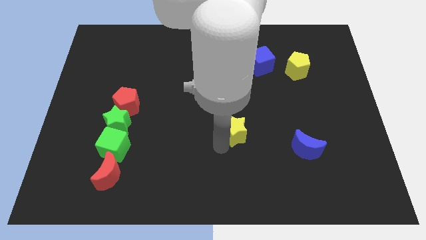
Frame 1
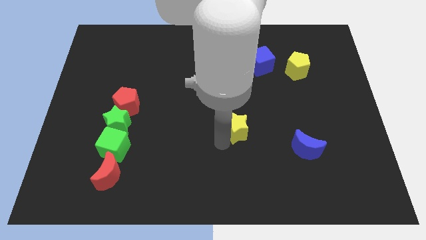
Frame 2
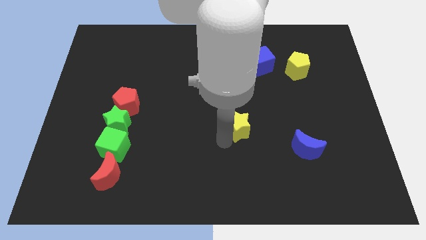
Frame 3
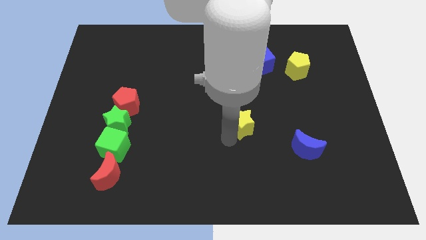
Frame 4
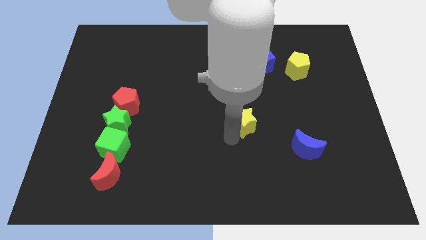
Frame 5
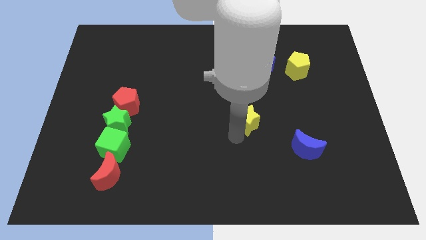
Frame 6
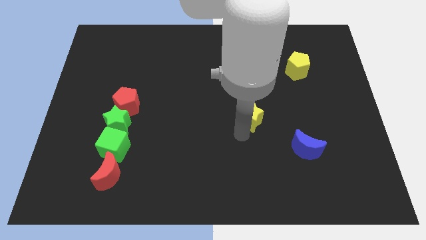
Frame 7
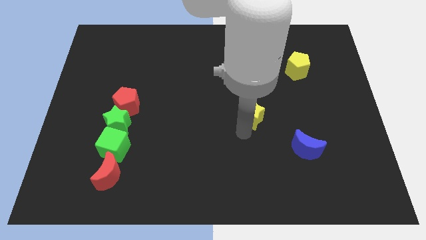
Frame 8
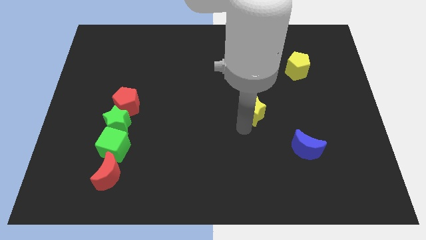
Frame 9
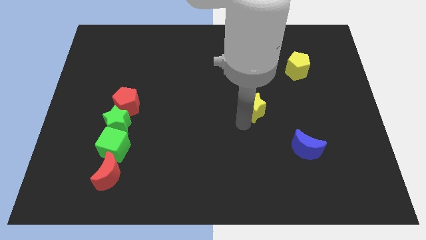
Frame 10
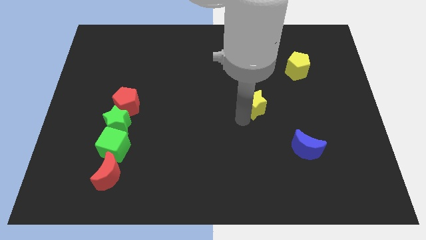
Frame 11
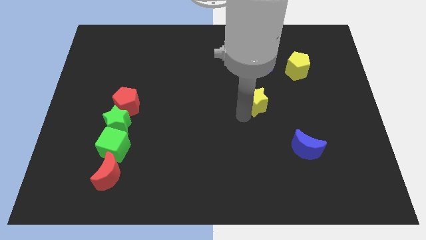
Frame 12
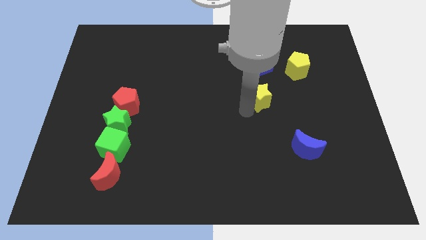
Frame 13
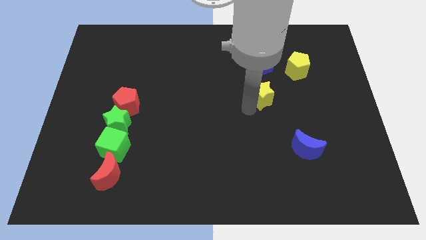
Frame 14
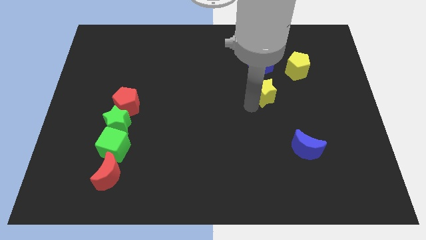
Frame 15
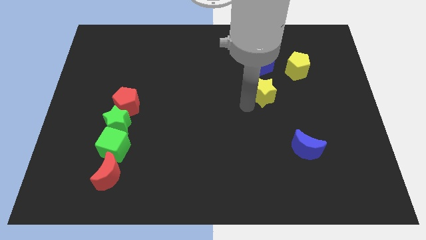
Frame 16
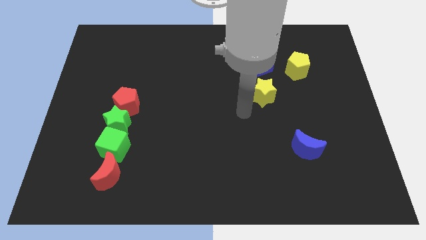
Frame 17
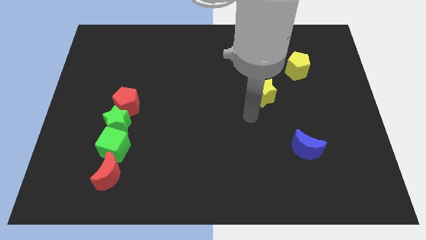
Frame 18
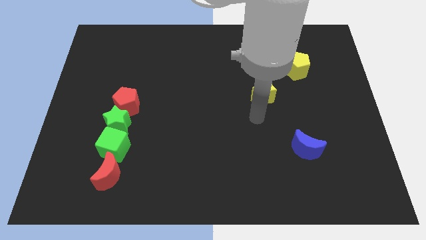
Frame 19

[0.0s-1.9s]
move the yellow star to the bottom side of the blue cube

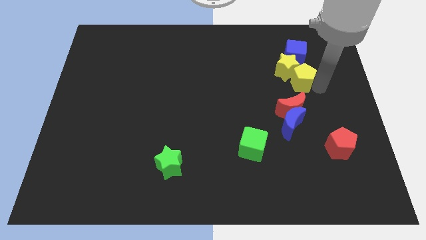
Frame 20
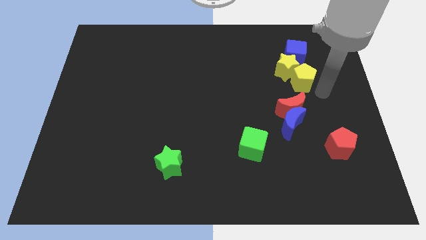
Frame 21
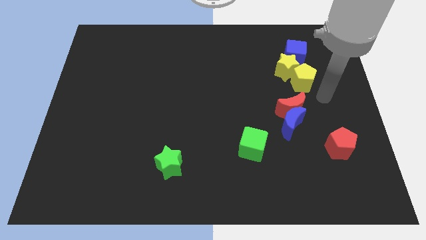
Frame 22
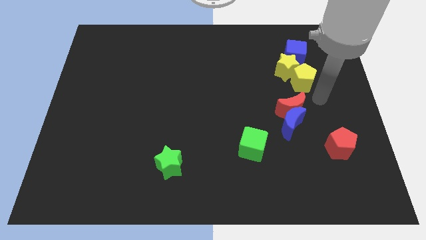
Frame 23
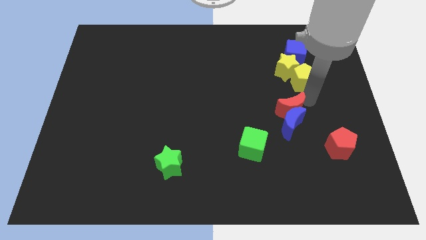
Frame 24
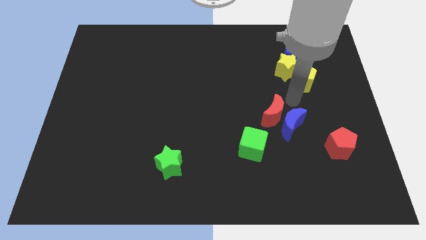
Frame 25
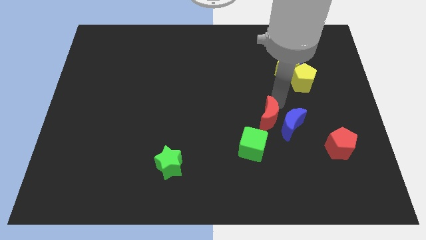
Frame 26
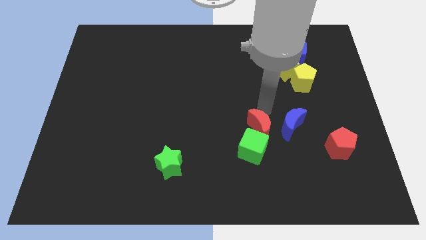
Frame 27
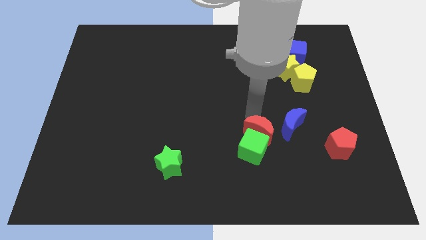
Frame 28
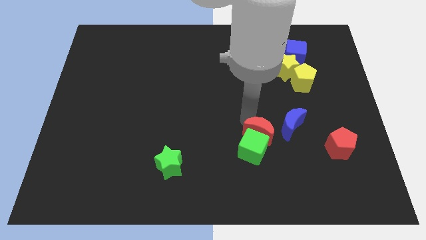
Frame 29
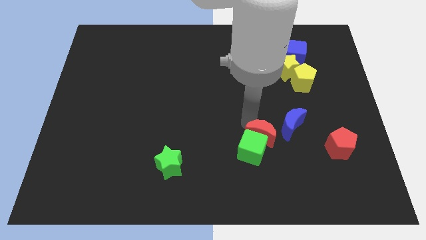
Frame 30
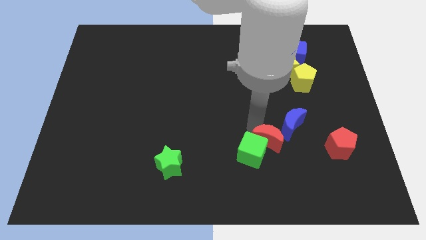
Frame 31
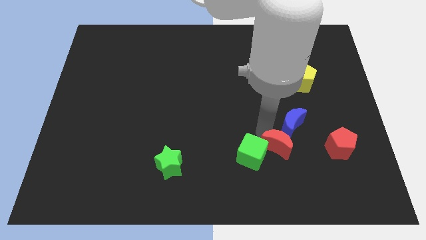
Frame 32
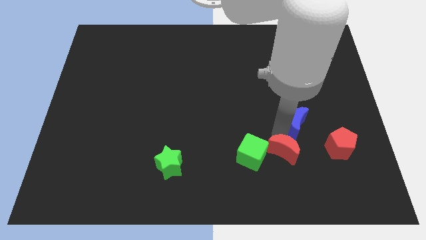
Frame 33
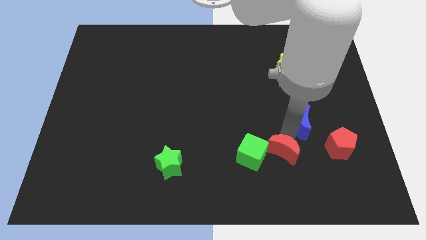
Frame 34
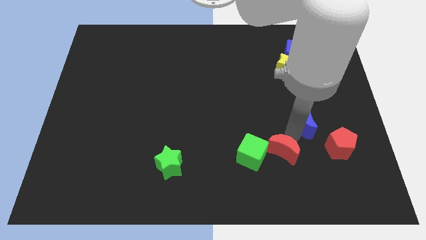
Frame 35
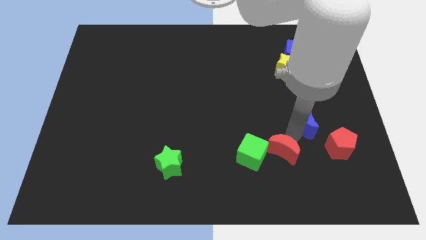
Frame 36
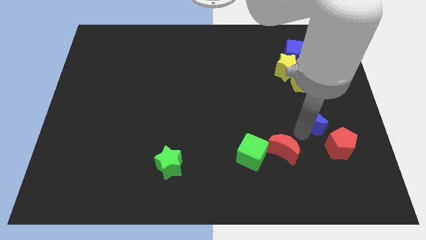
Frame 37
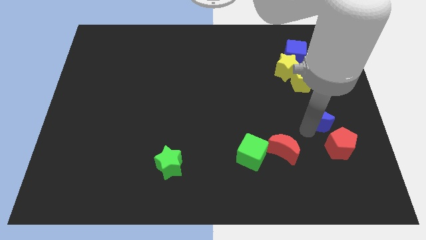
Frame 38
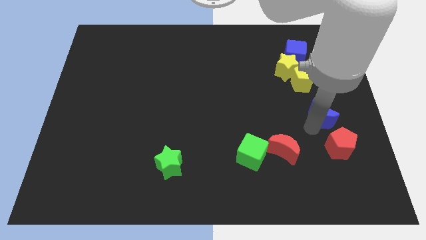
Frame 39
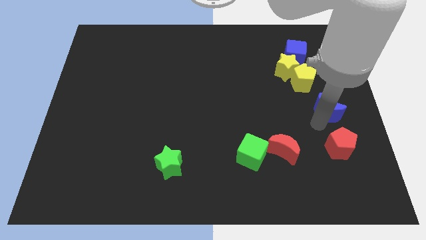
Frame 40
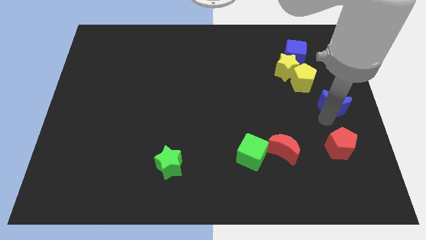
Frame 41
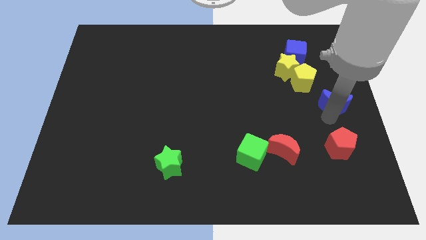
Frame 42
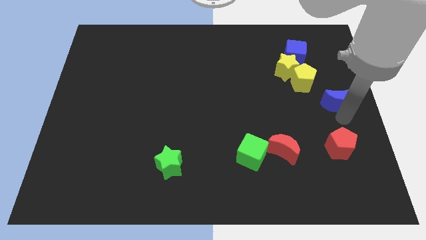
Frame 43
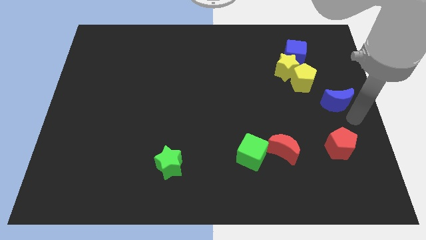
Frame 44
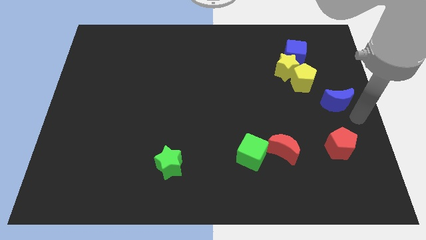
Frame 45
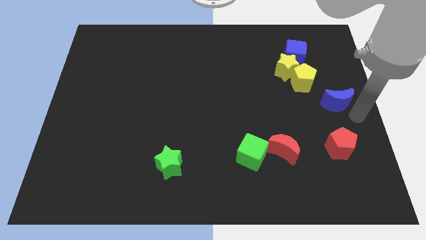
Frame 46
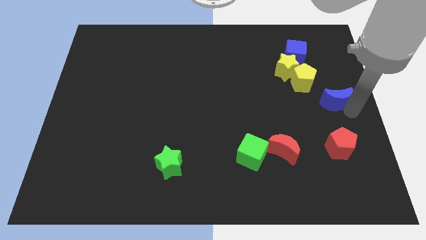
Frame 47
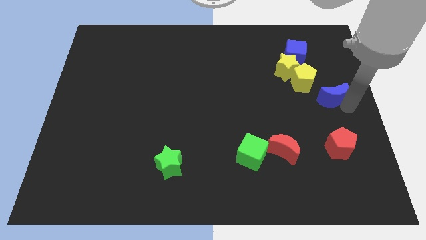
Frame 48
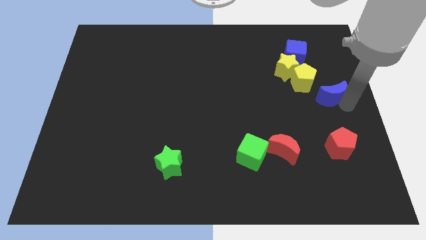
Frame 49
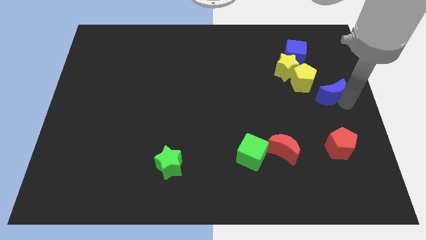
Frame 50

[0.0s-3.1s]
separate the red and blue crescents

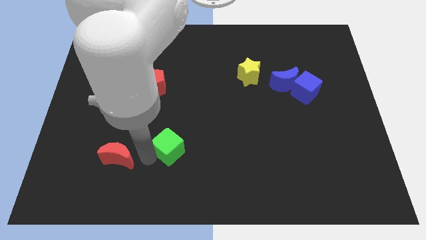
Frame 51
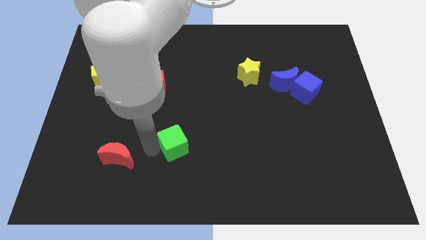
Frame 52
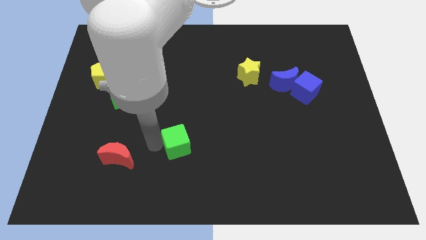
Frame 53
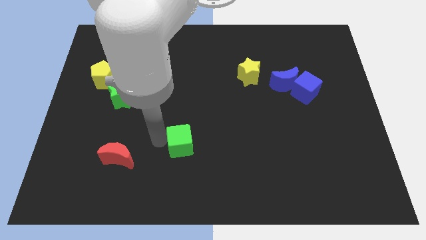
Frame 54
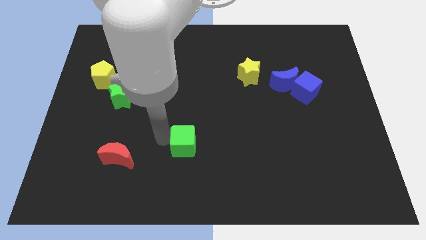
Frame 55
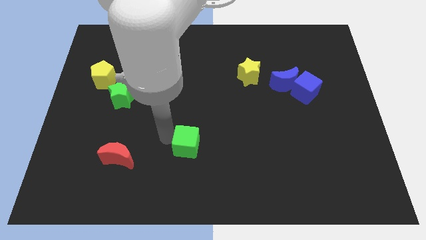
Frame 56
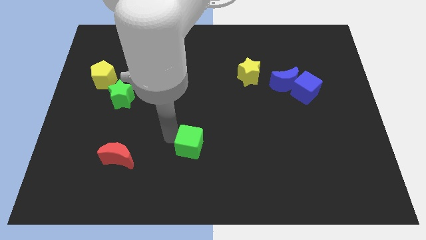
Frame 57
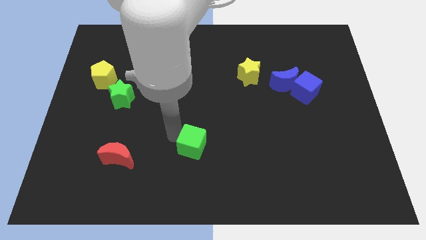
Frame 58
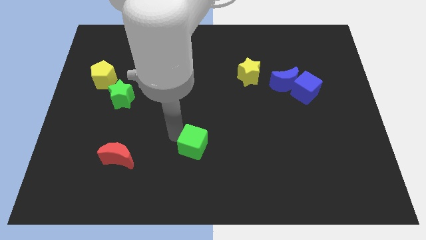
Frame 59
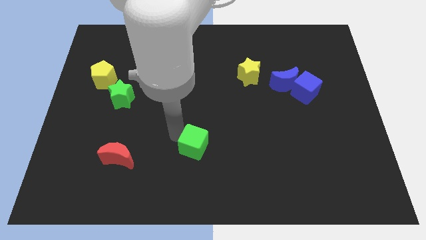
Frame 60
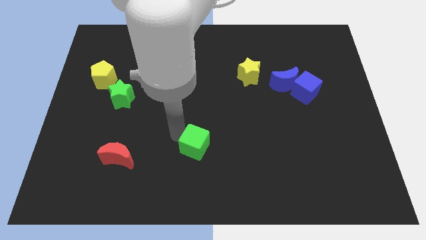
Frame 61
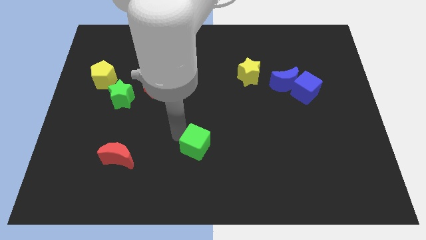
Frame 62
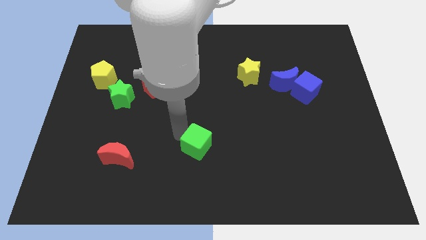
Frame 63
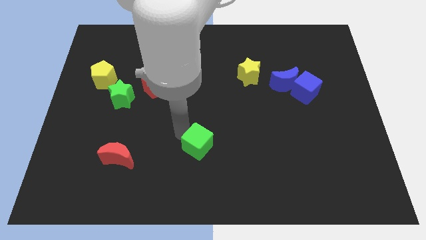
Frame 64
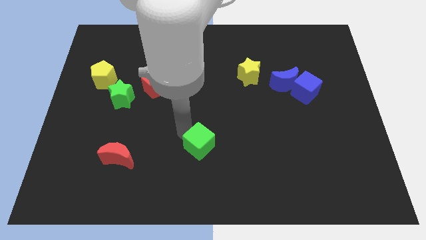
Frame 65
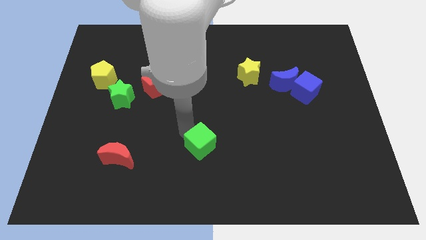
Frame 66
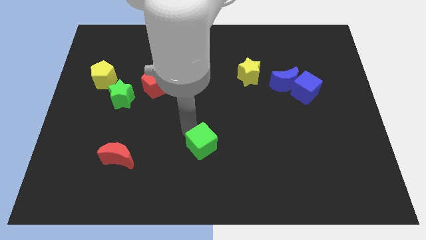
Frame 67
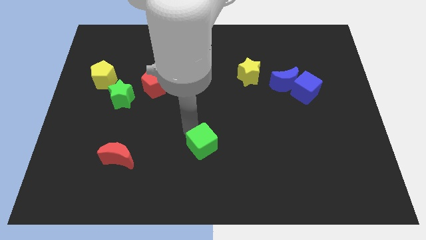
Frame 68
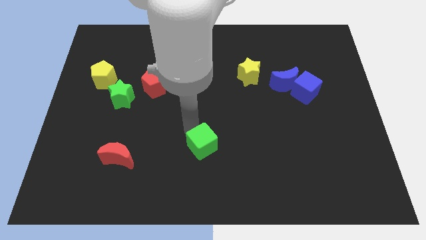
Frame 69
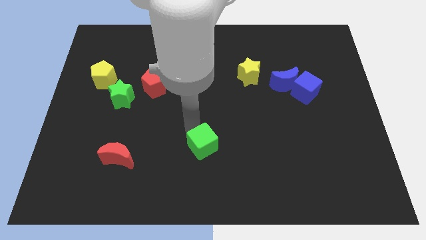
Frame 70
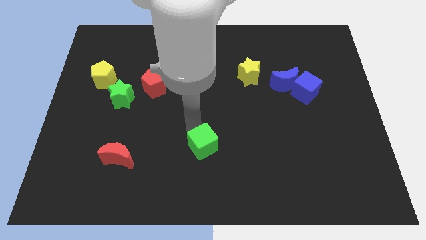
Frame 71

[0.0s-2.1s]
move the green cube away from the red moon

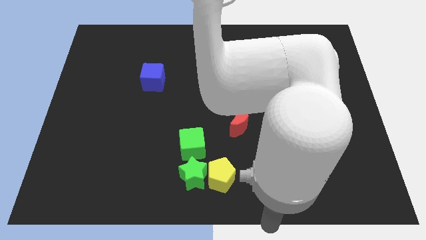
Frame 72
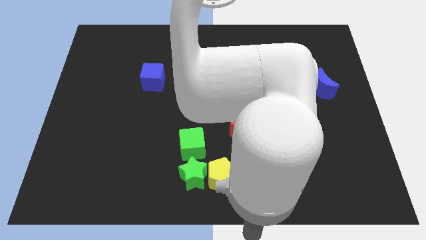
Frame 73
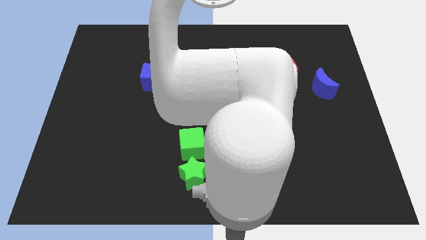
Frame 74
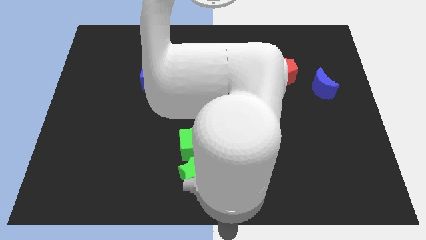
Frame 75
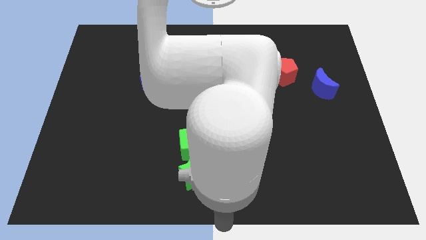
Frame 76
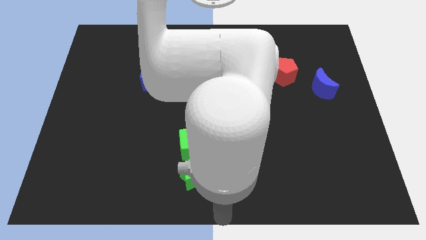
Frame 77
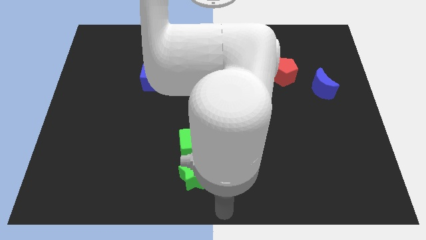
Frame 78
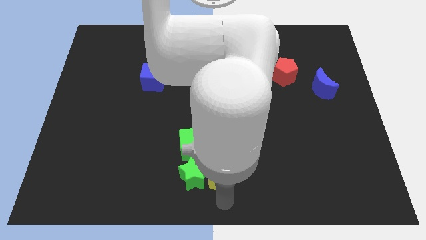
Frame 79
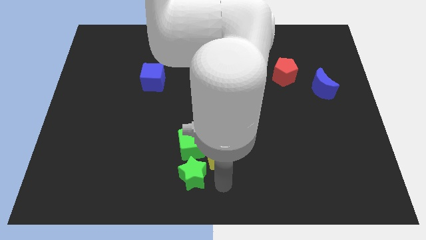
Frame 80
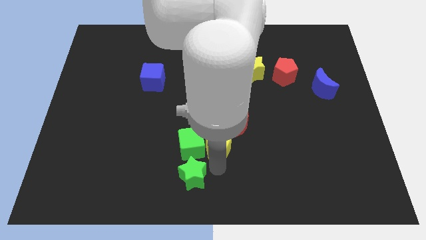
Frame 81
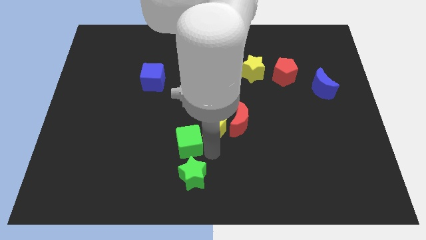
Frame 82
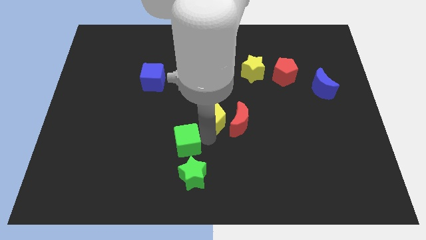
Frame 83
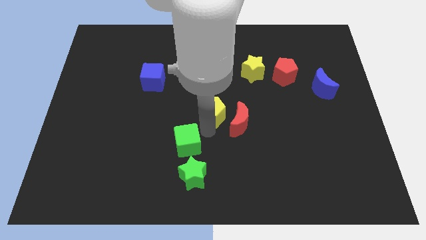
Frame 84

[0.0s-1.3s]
place the yellow pentagon left to the red moon

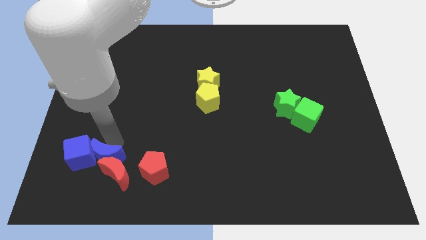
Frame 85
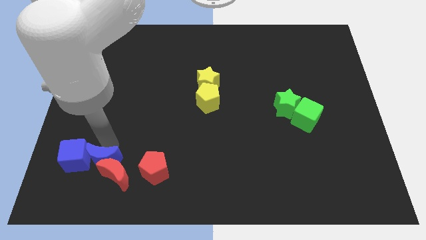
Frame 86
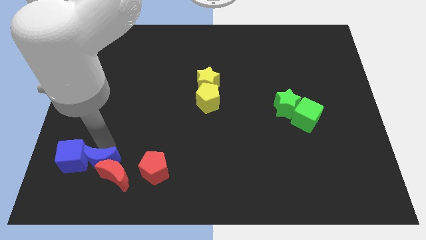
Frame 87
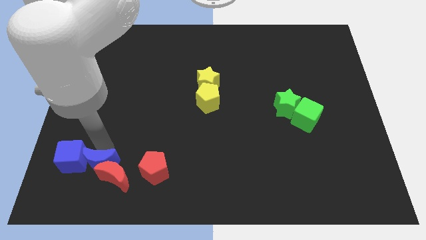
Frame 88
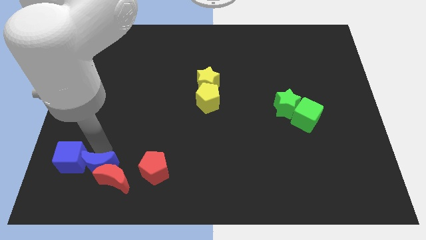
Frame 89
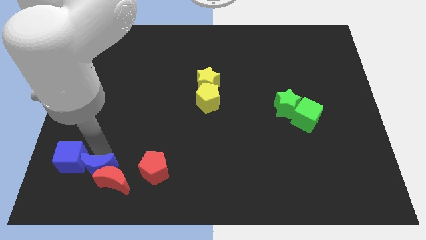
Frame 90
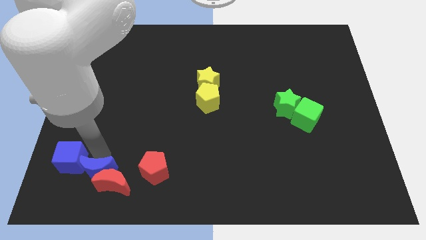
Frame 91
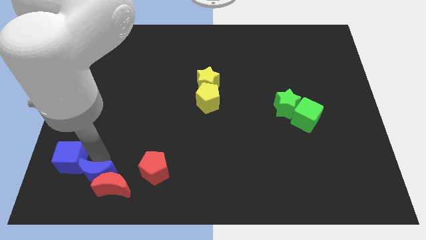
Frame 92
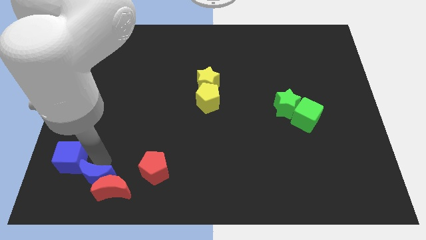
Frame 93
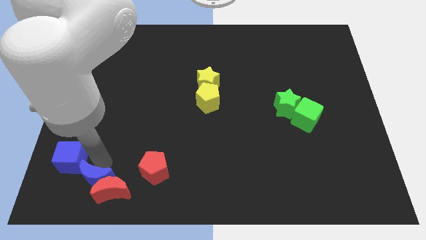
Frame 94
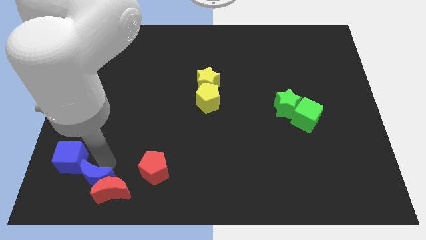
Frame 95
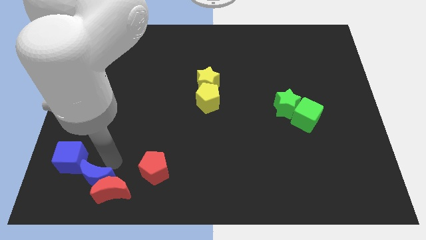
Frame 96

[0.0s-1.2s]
push the blue crescent into red crescent
